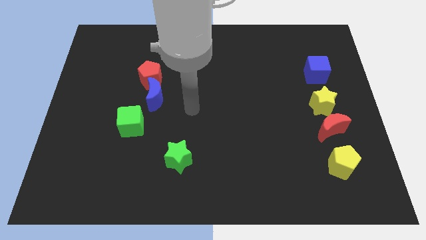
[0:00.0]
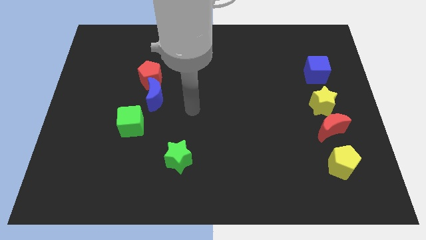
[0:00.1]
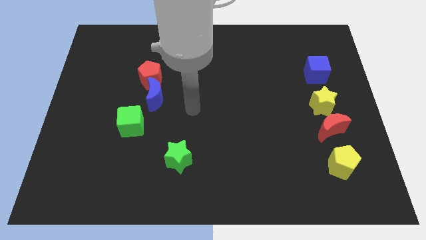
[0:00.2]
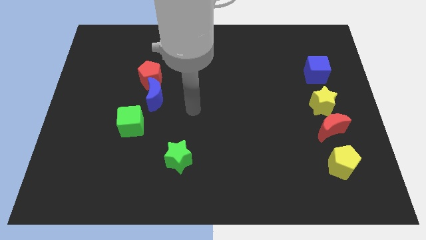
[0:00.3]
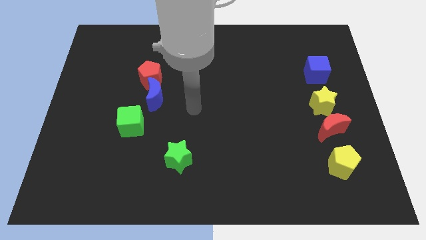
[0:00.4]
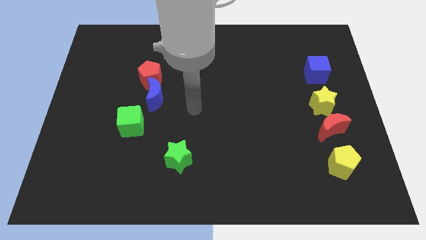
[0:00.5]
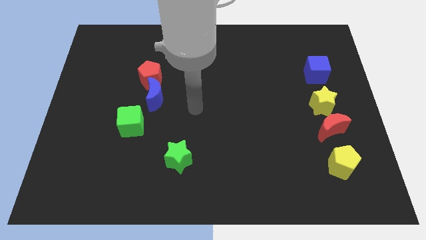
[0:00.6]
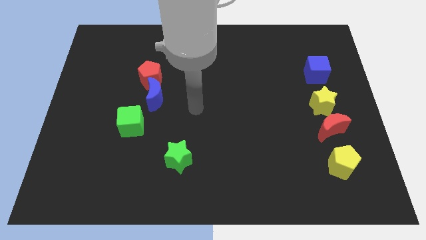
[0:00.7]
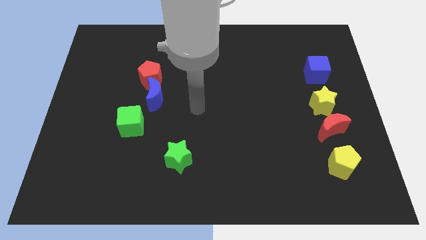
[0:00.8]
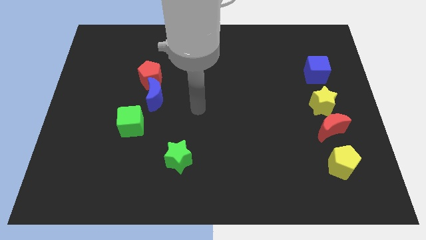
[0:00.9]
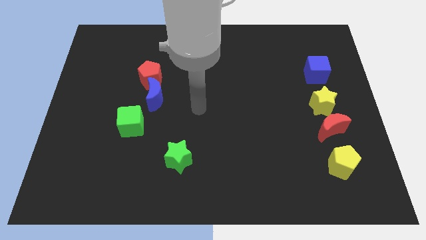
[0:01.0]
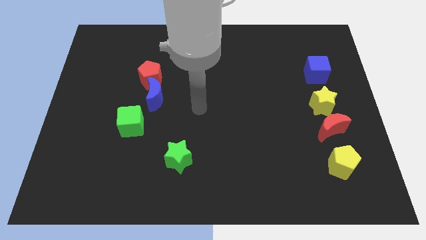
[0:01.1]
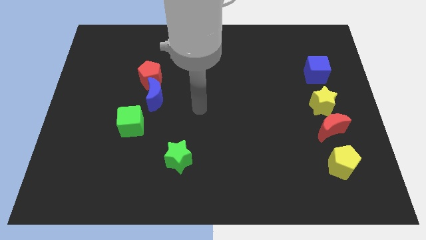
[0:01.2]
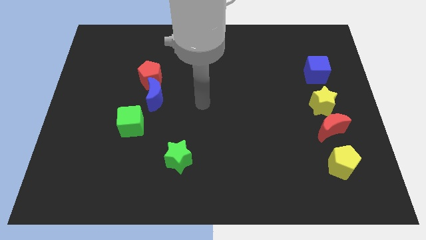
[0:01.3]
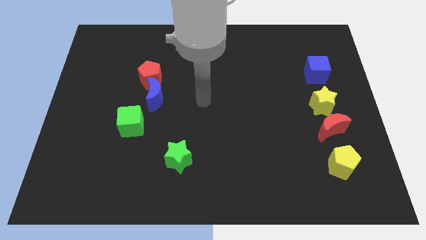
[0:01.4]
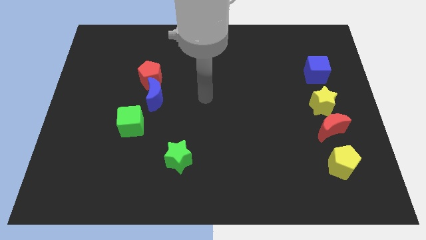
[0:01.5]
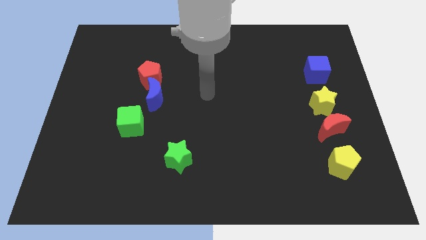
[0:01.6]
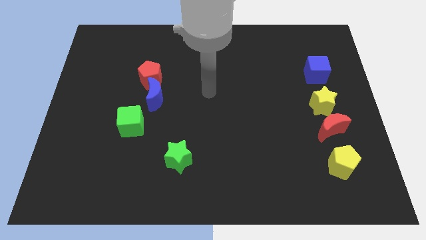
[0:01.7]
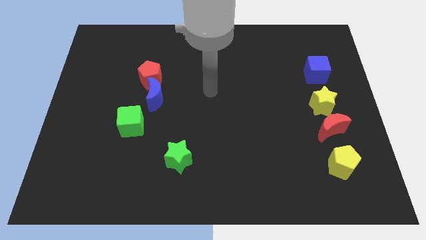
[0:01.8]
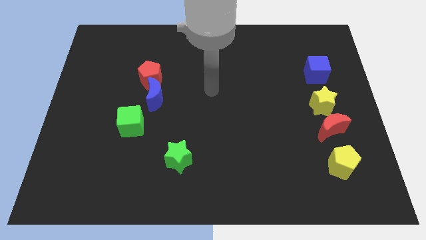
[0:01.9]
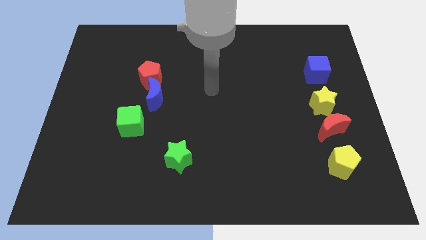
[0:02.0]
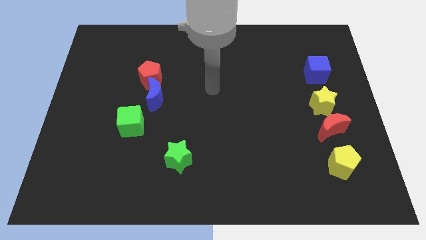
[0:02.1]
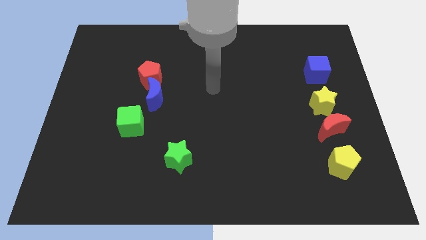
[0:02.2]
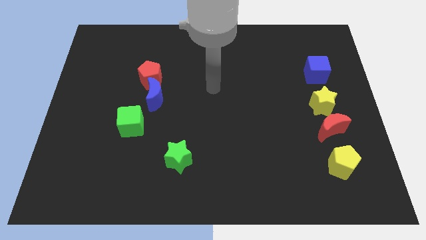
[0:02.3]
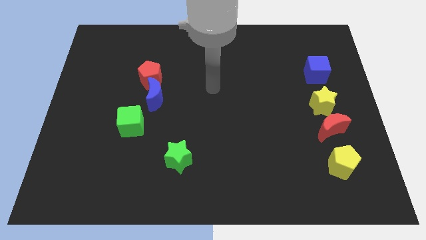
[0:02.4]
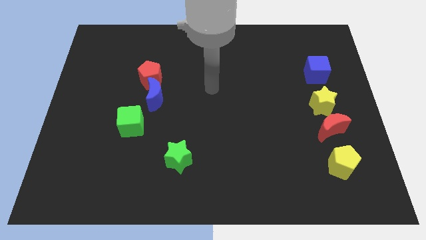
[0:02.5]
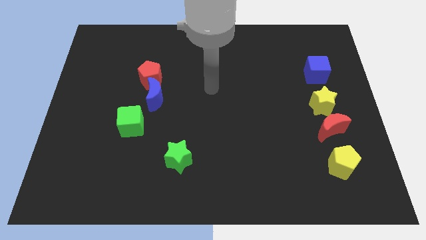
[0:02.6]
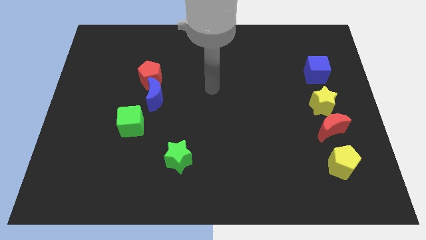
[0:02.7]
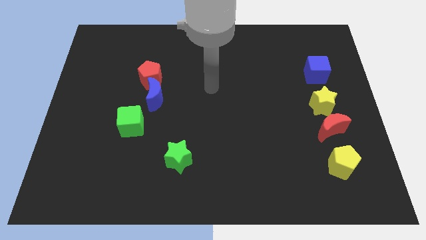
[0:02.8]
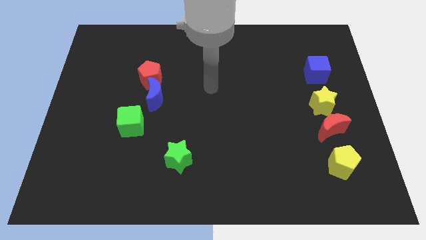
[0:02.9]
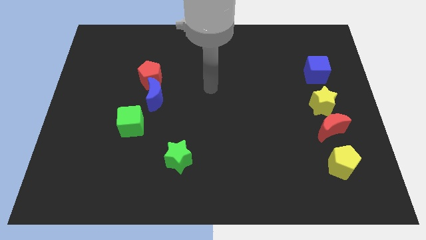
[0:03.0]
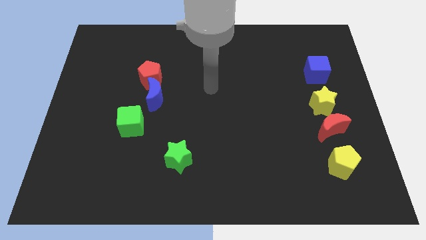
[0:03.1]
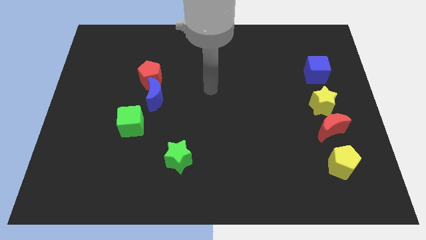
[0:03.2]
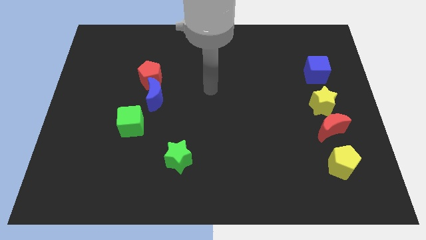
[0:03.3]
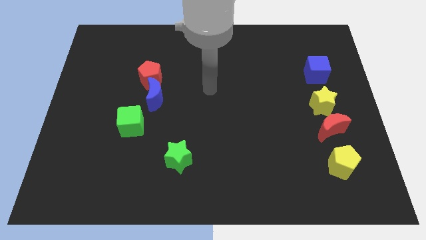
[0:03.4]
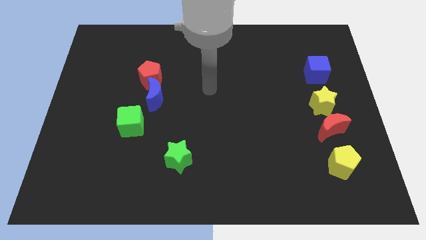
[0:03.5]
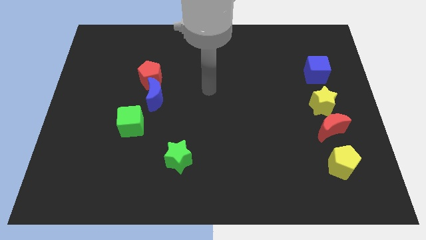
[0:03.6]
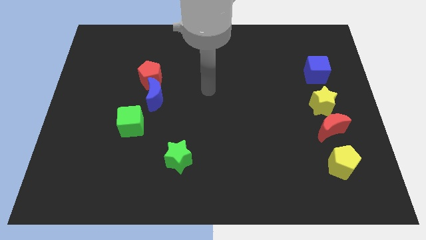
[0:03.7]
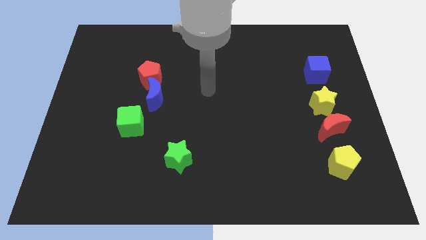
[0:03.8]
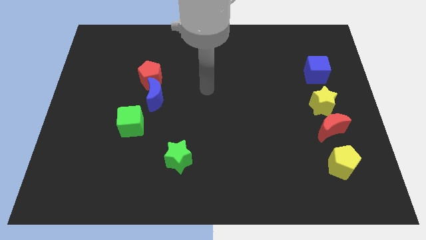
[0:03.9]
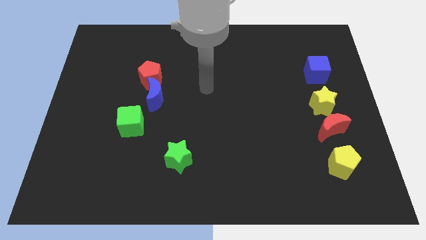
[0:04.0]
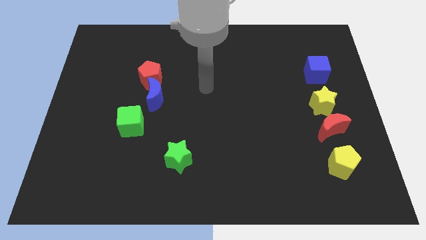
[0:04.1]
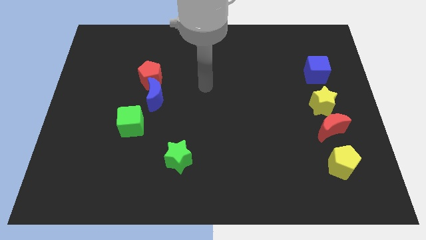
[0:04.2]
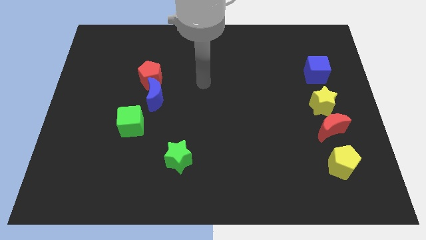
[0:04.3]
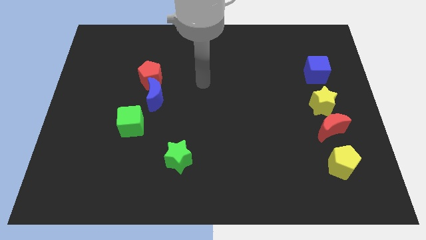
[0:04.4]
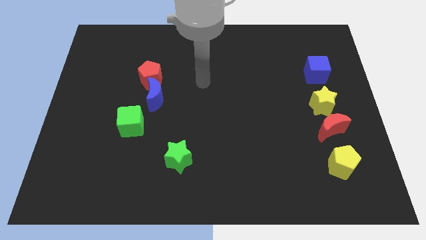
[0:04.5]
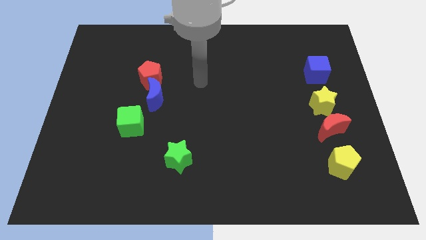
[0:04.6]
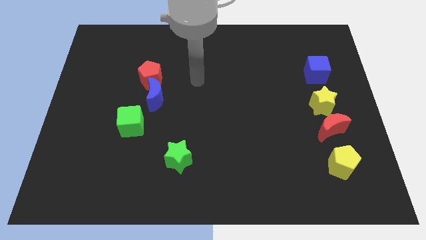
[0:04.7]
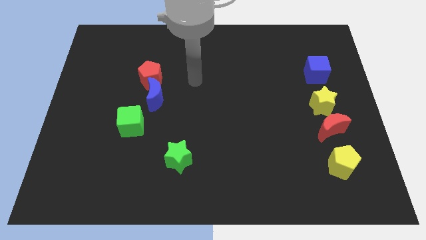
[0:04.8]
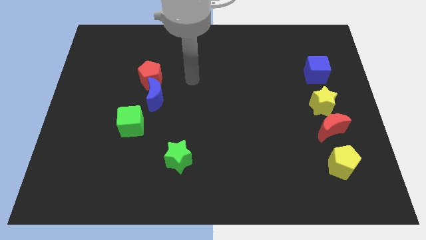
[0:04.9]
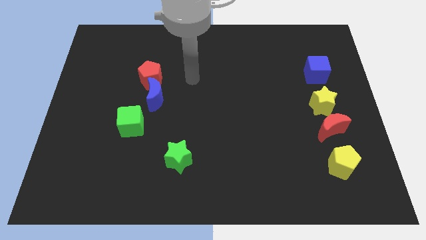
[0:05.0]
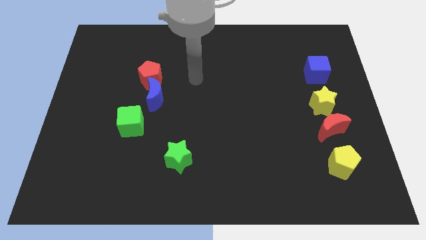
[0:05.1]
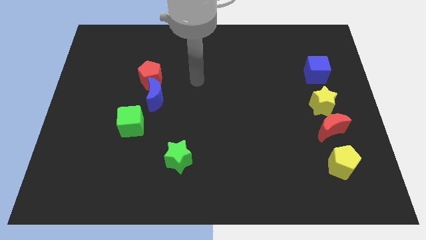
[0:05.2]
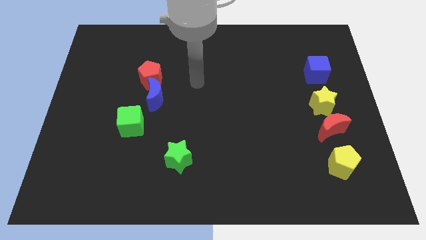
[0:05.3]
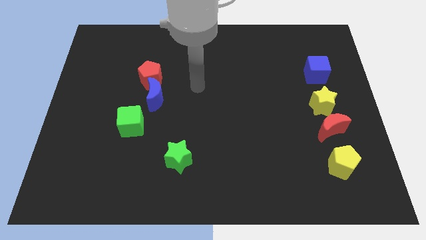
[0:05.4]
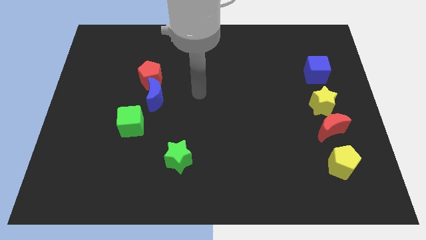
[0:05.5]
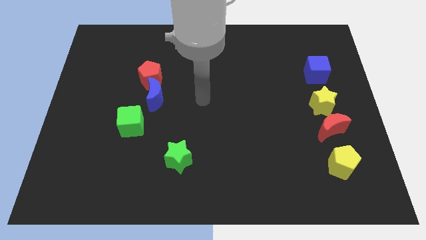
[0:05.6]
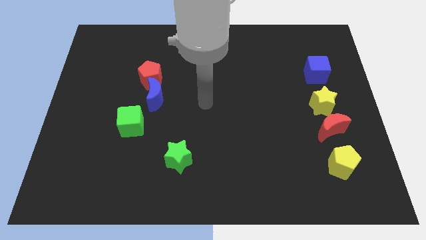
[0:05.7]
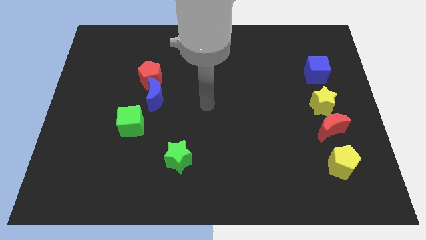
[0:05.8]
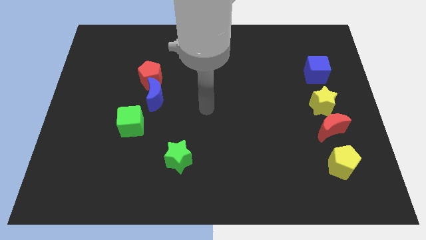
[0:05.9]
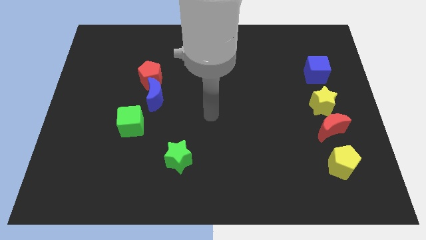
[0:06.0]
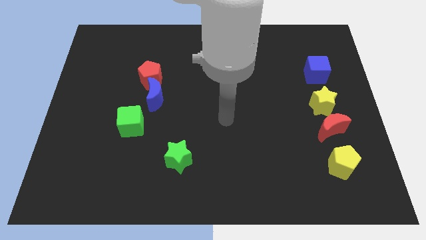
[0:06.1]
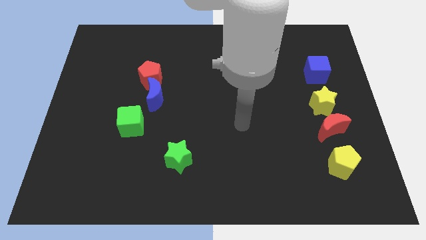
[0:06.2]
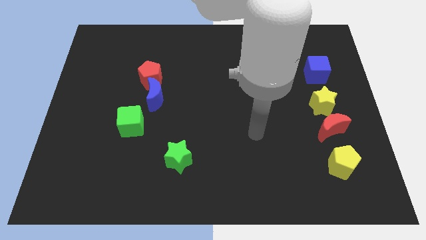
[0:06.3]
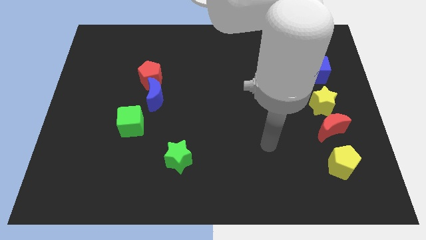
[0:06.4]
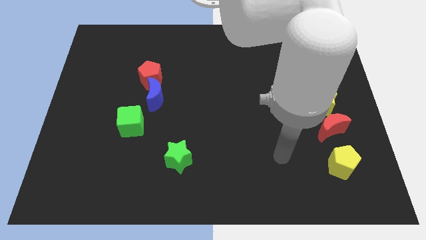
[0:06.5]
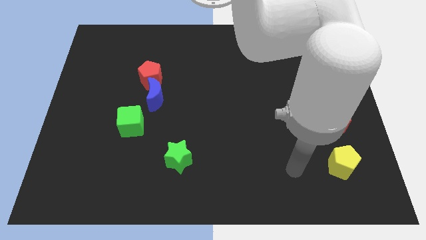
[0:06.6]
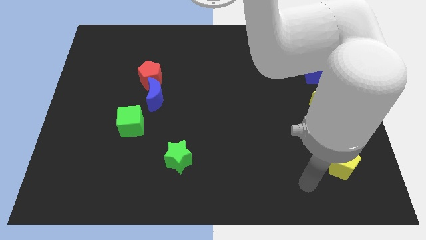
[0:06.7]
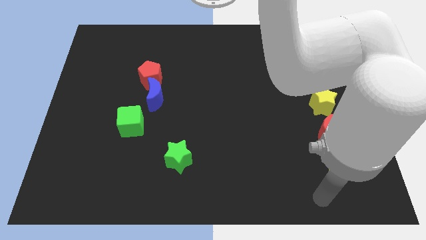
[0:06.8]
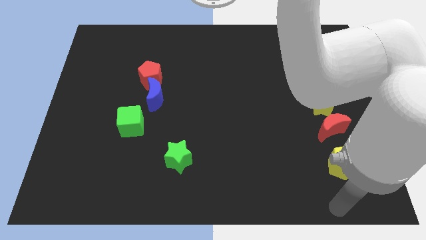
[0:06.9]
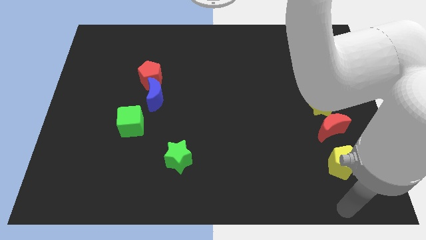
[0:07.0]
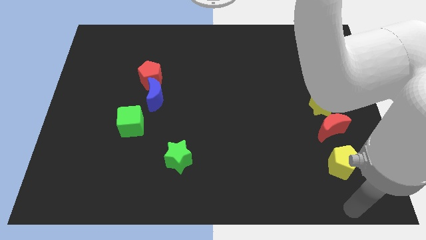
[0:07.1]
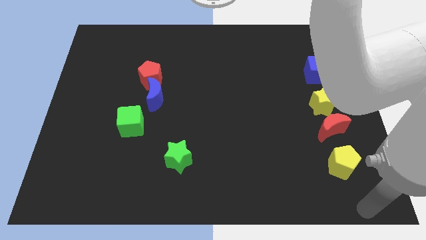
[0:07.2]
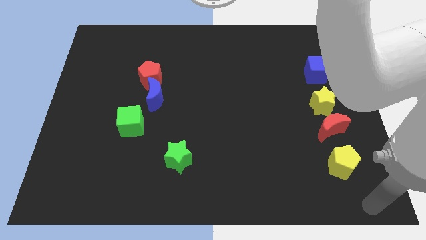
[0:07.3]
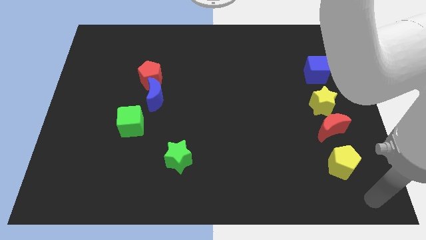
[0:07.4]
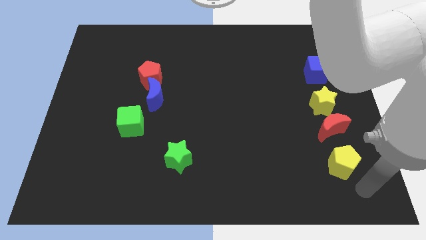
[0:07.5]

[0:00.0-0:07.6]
move your arm towards the yellow pentagon

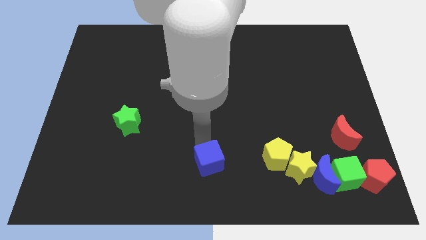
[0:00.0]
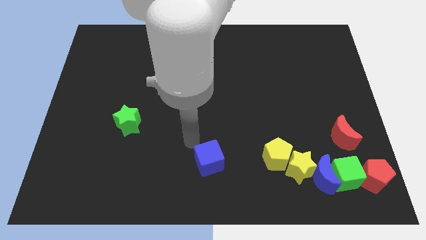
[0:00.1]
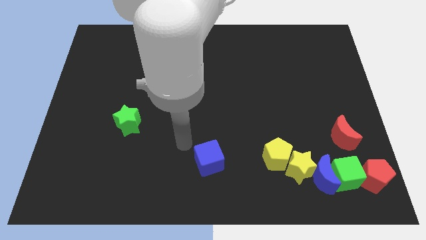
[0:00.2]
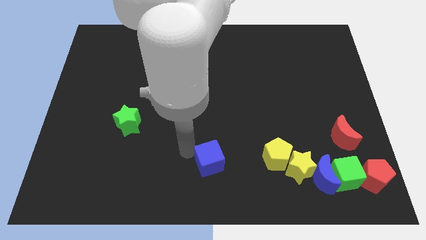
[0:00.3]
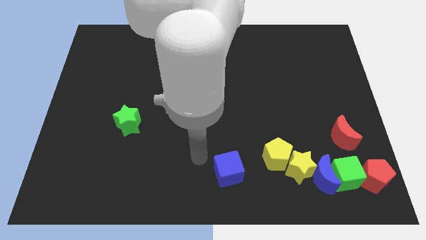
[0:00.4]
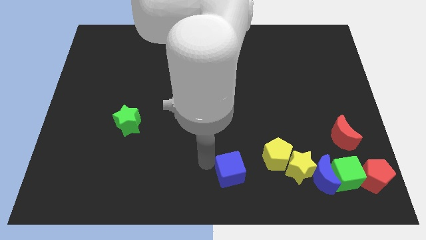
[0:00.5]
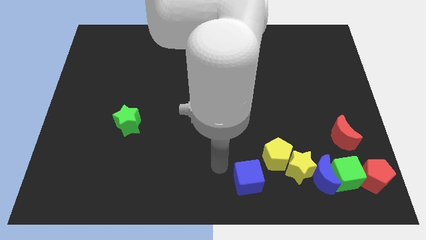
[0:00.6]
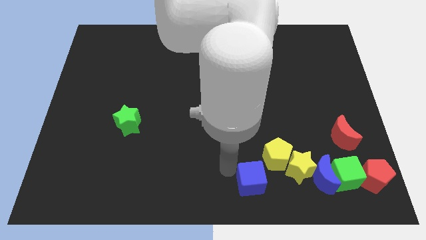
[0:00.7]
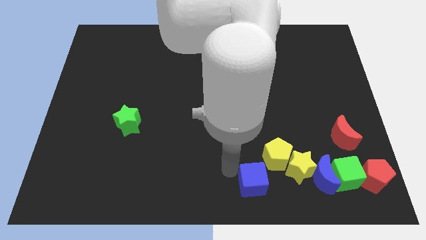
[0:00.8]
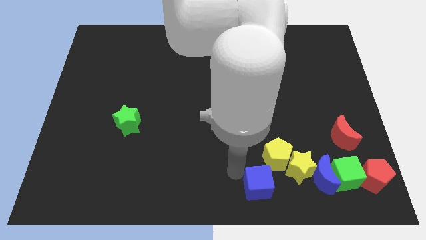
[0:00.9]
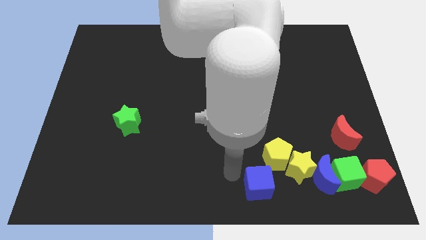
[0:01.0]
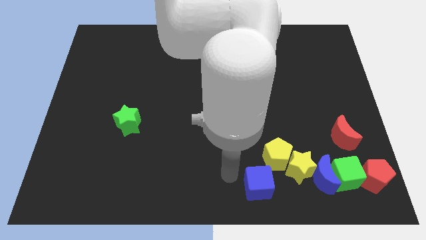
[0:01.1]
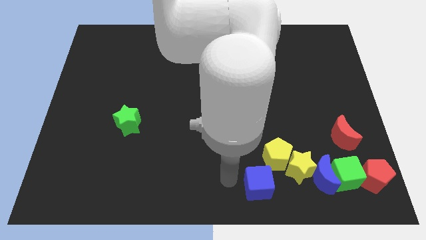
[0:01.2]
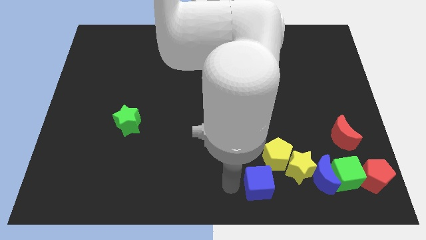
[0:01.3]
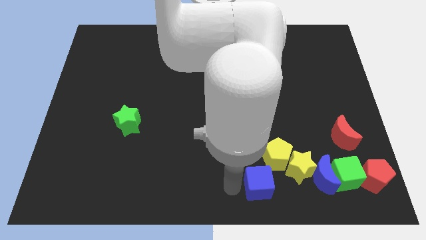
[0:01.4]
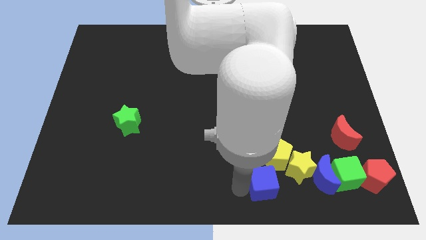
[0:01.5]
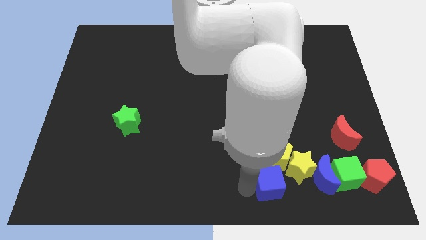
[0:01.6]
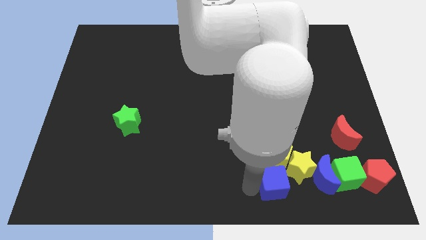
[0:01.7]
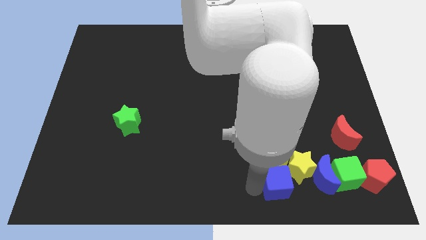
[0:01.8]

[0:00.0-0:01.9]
slide the blue cube below the yellow pentagon
